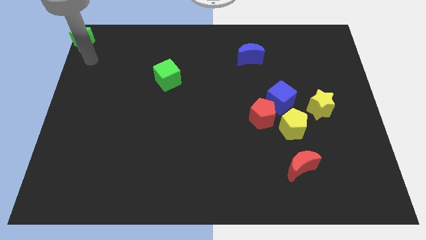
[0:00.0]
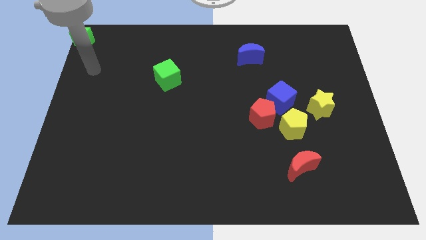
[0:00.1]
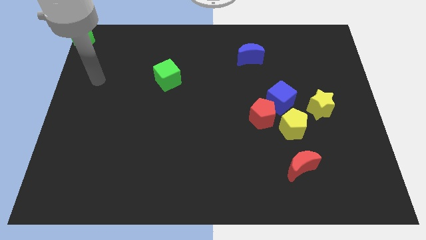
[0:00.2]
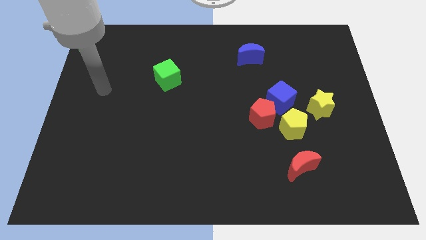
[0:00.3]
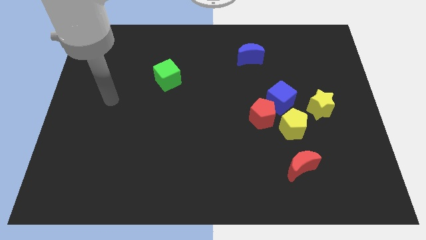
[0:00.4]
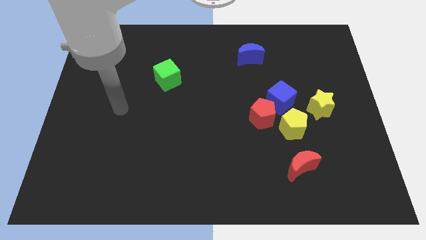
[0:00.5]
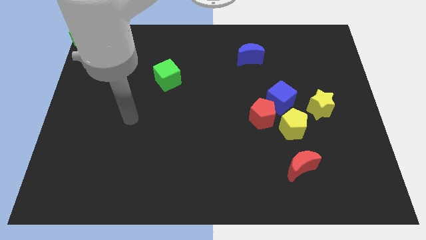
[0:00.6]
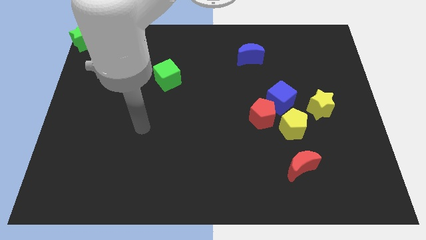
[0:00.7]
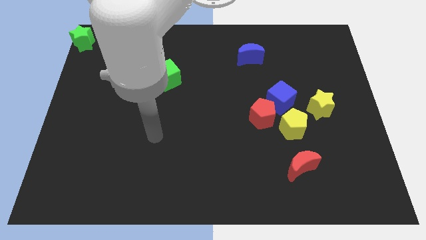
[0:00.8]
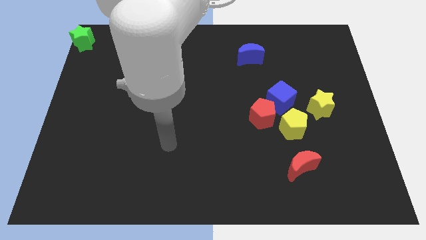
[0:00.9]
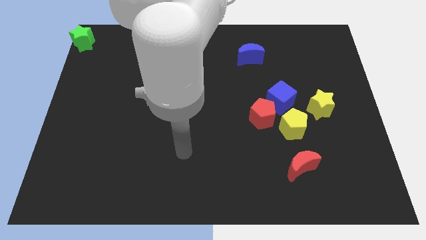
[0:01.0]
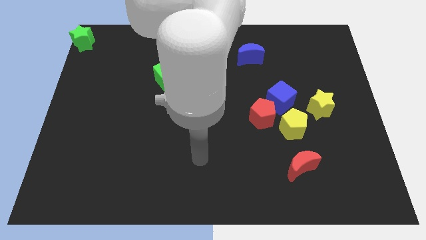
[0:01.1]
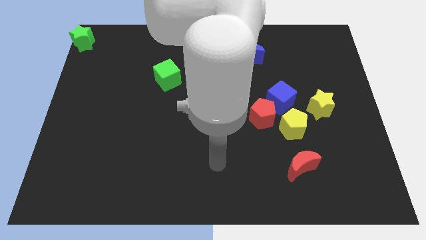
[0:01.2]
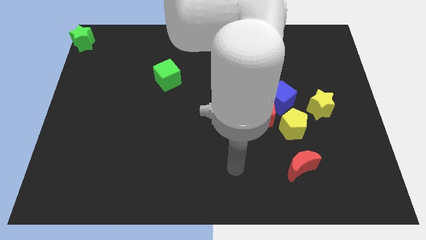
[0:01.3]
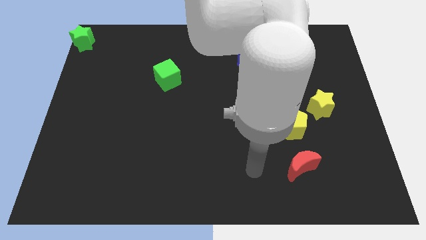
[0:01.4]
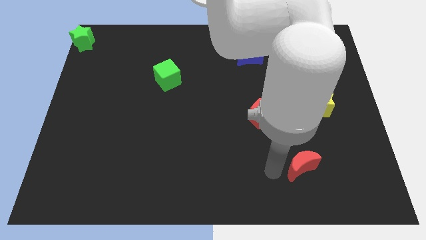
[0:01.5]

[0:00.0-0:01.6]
drag the arm away from the green star

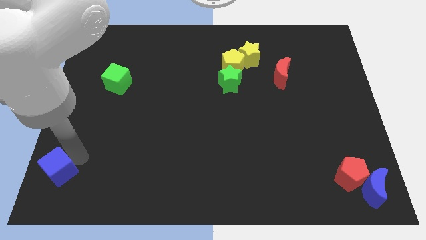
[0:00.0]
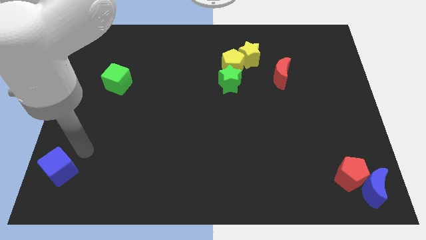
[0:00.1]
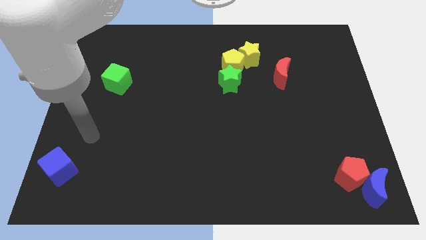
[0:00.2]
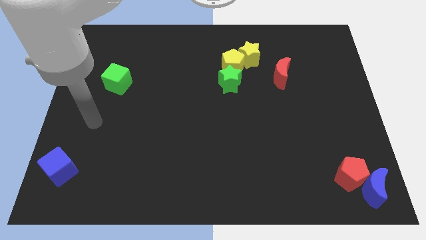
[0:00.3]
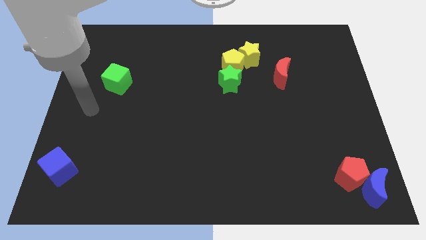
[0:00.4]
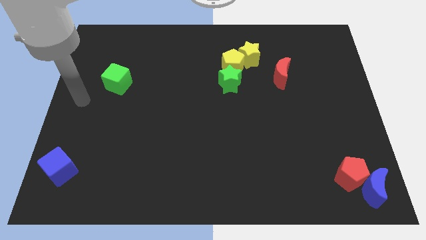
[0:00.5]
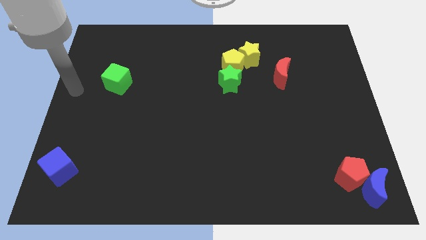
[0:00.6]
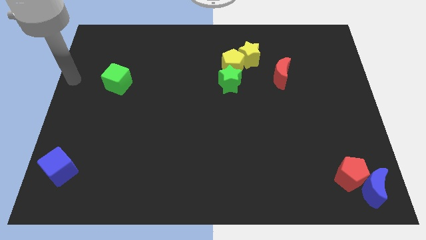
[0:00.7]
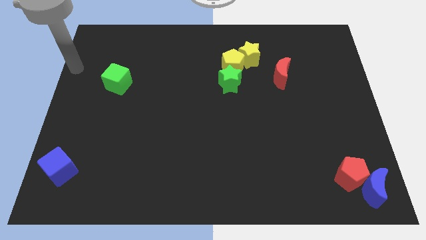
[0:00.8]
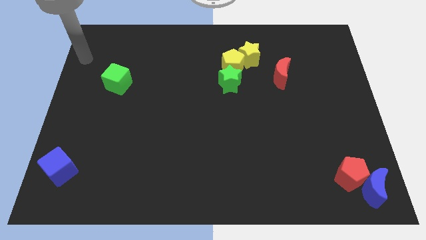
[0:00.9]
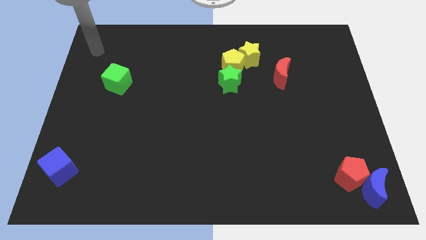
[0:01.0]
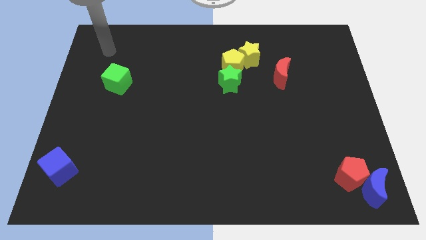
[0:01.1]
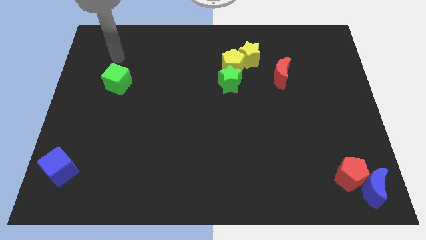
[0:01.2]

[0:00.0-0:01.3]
move the arm away from the blue cube

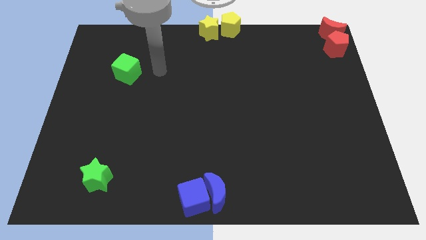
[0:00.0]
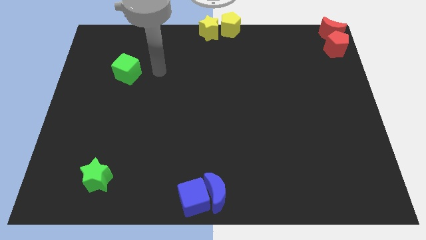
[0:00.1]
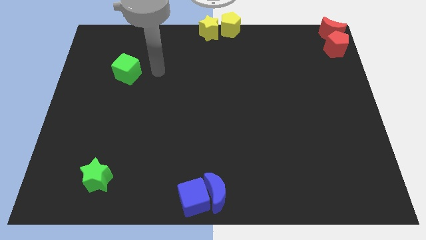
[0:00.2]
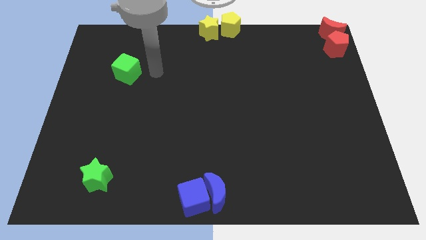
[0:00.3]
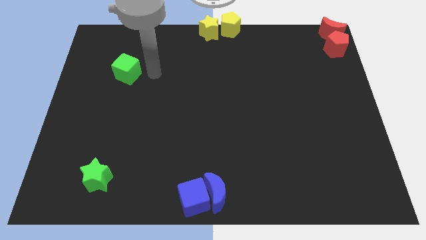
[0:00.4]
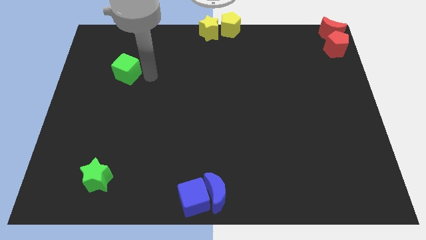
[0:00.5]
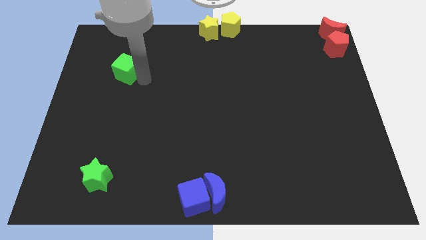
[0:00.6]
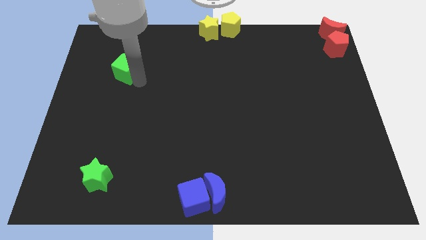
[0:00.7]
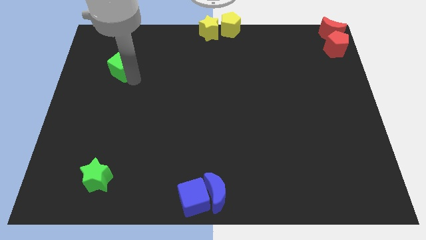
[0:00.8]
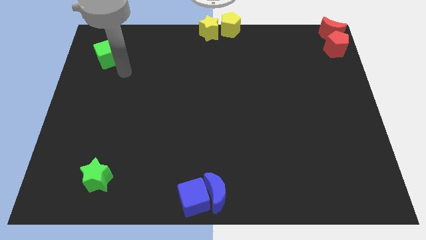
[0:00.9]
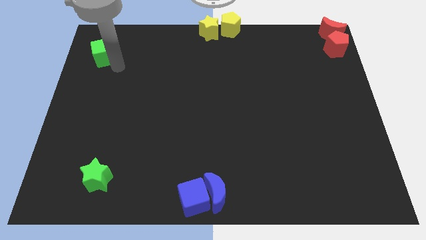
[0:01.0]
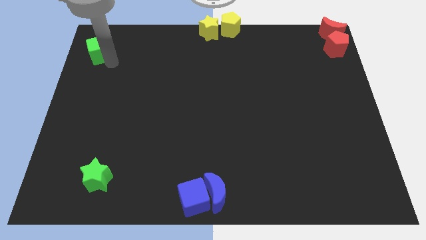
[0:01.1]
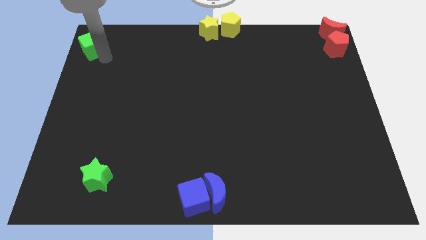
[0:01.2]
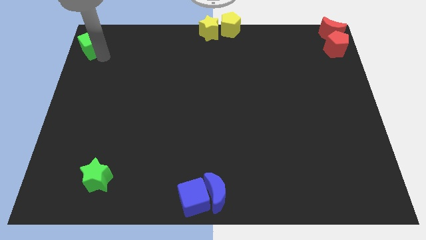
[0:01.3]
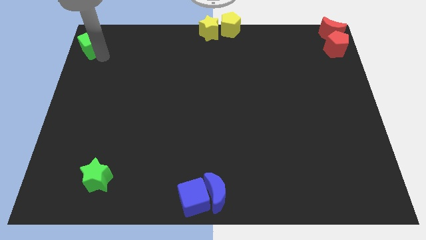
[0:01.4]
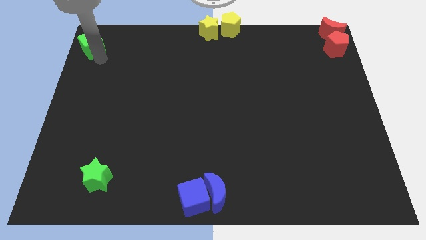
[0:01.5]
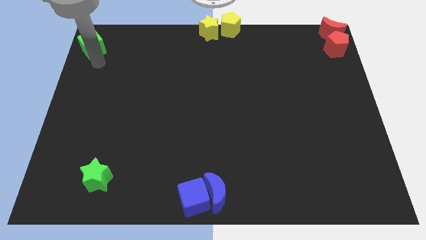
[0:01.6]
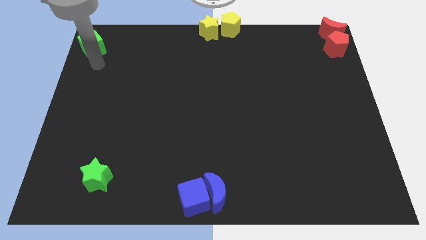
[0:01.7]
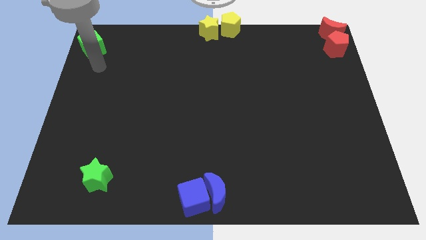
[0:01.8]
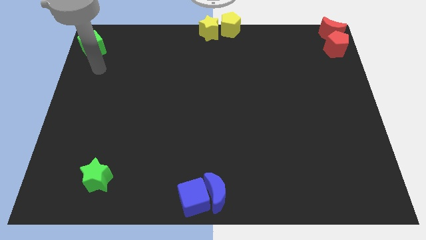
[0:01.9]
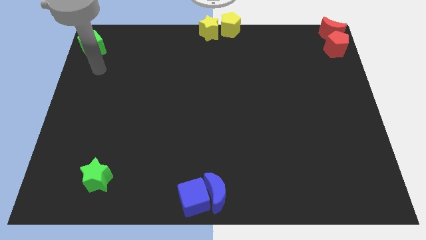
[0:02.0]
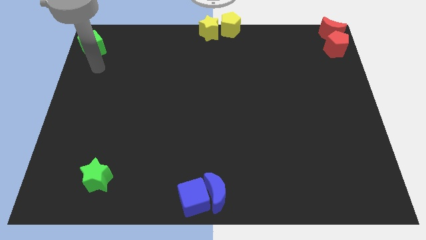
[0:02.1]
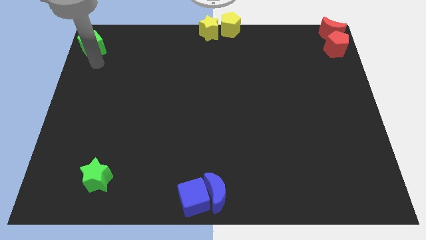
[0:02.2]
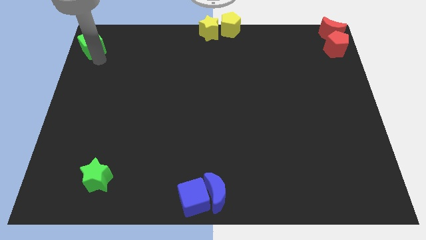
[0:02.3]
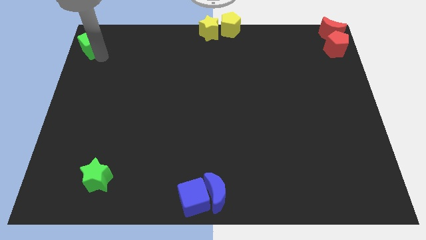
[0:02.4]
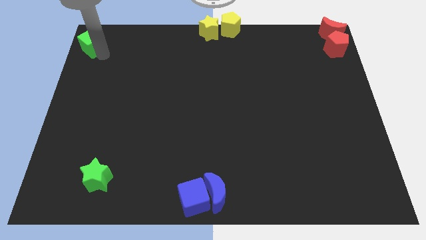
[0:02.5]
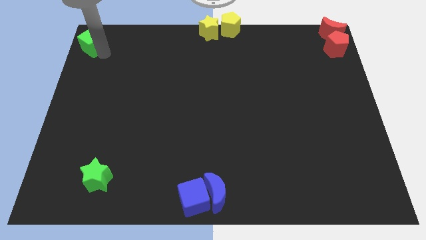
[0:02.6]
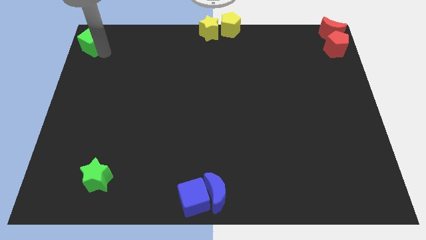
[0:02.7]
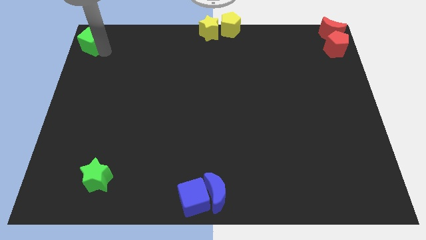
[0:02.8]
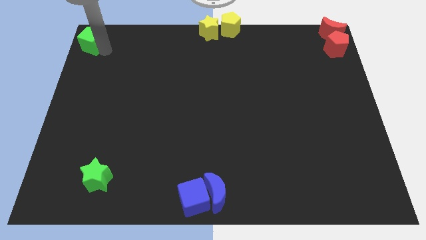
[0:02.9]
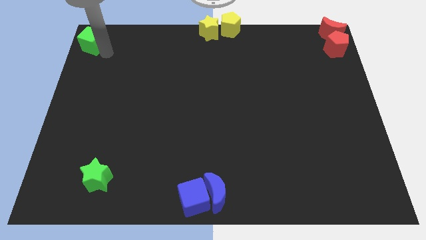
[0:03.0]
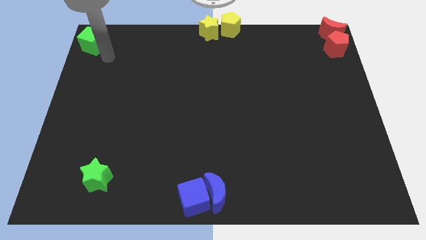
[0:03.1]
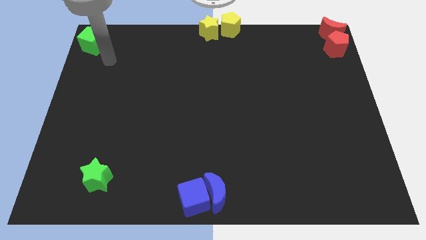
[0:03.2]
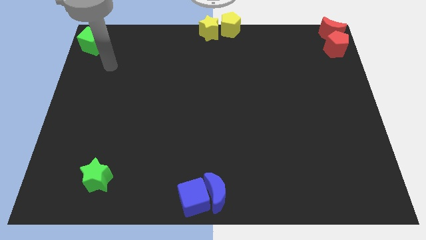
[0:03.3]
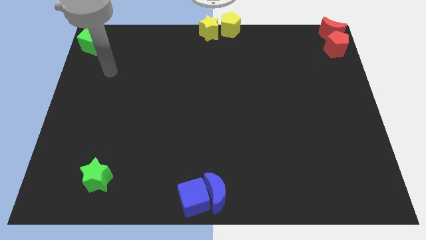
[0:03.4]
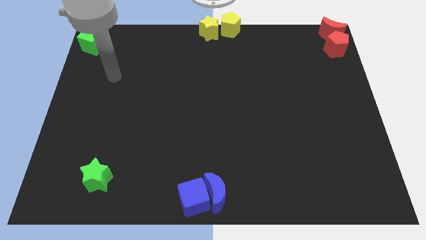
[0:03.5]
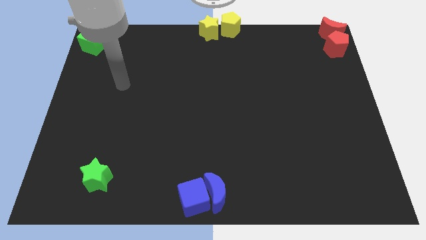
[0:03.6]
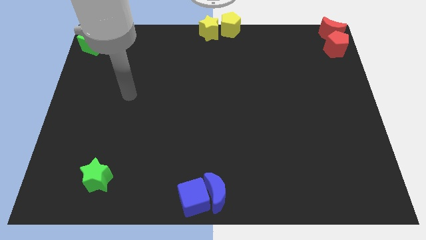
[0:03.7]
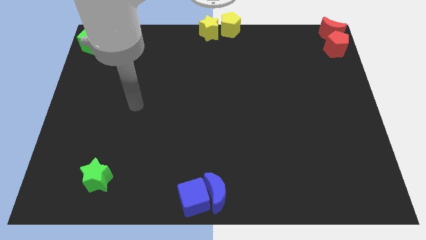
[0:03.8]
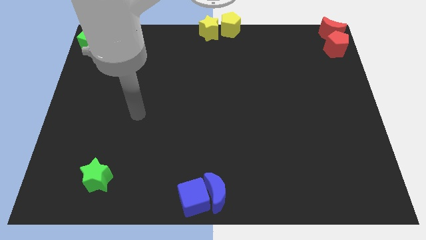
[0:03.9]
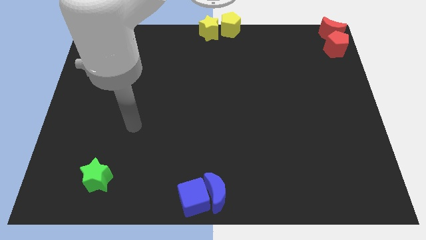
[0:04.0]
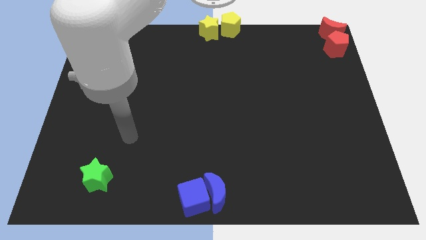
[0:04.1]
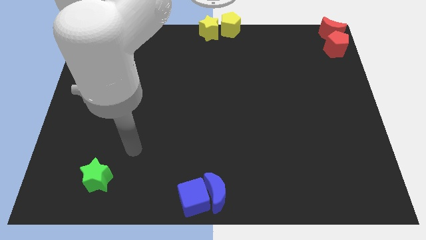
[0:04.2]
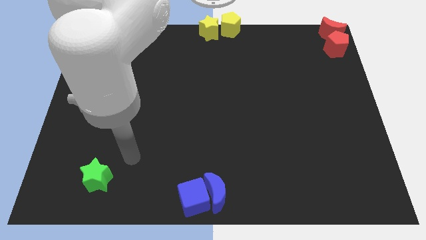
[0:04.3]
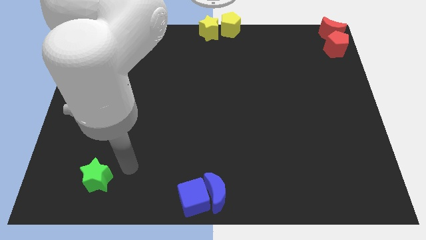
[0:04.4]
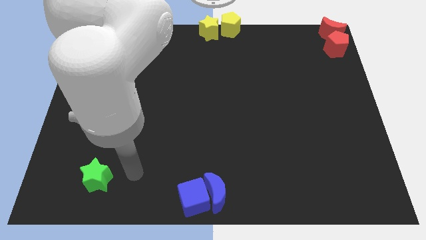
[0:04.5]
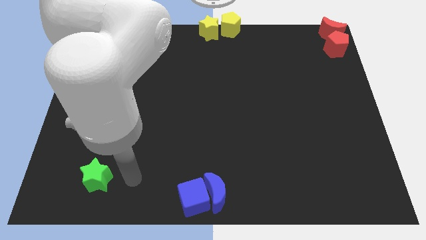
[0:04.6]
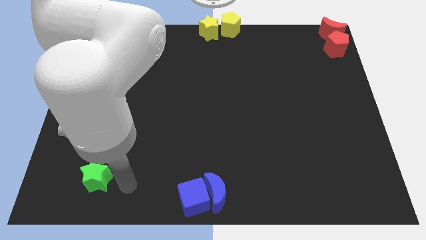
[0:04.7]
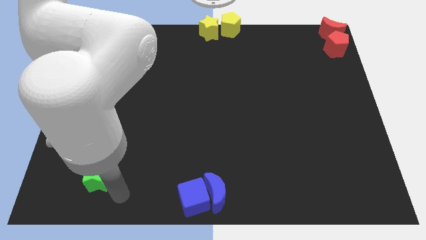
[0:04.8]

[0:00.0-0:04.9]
push the green cube to the top

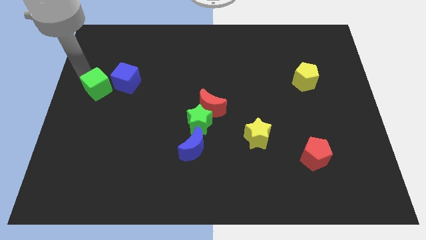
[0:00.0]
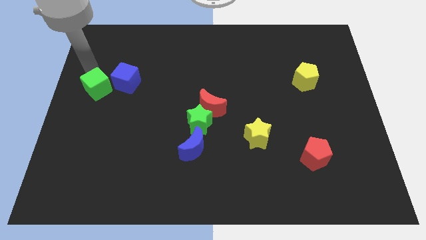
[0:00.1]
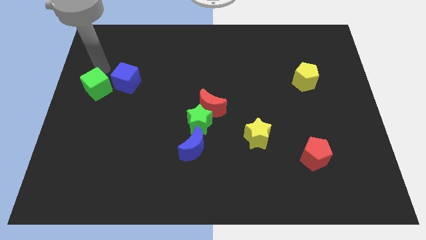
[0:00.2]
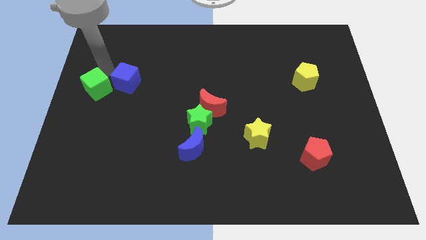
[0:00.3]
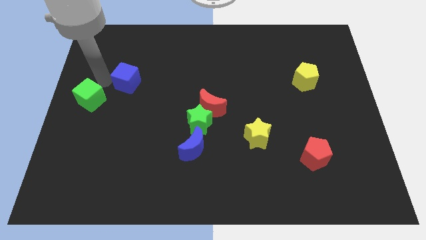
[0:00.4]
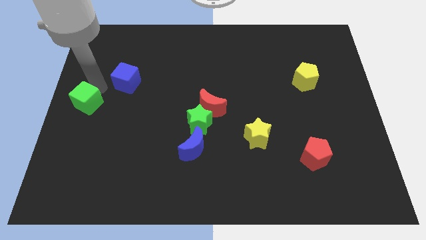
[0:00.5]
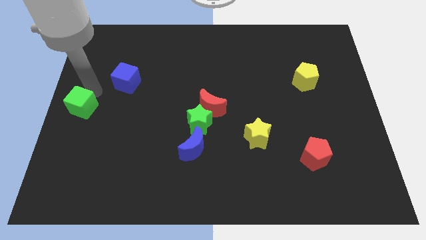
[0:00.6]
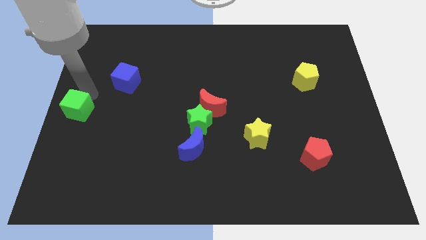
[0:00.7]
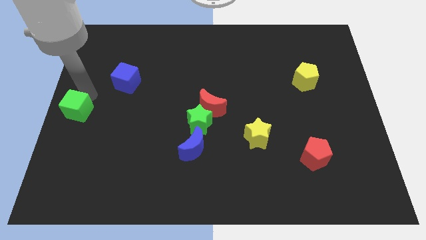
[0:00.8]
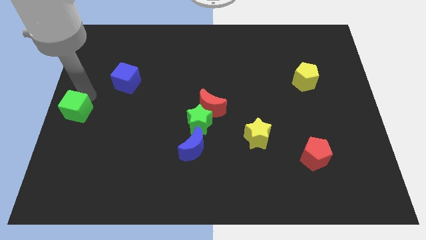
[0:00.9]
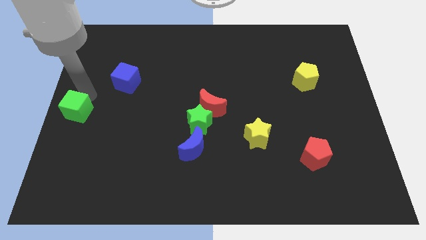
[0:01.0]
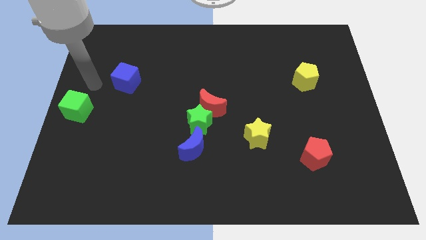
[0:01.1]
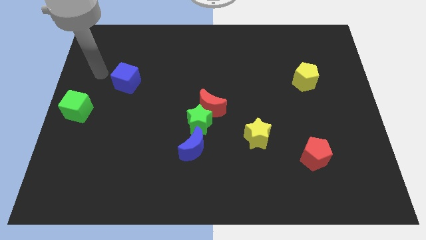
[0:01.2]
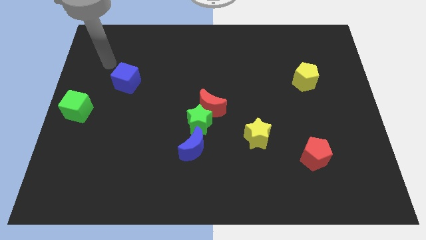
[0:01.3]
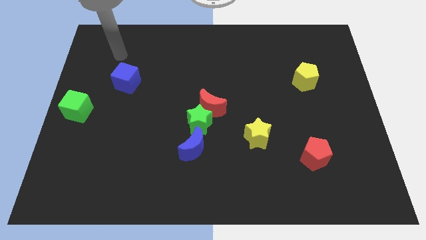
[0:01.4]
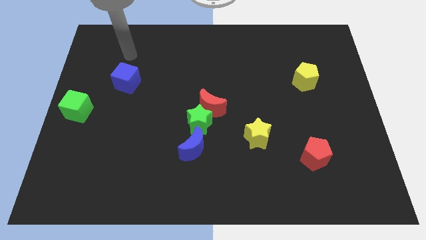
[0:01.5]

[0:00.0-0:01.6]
place the green cube at the center left side of the board
